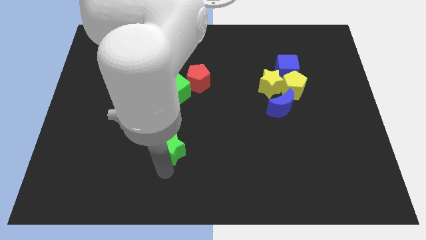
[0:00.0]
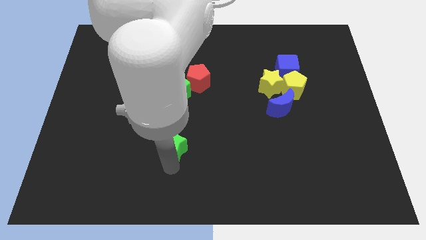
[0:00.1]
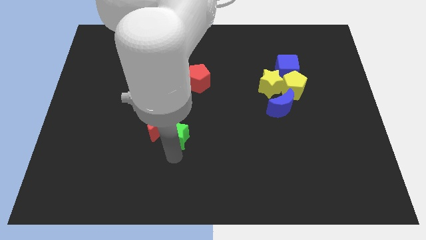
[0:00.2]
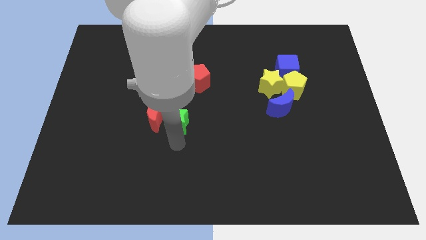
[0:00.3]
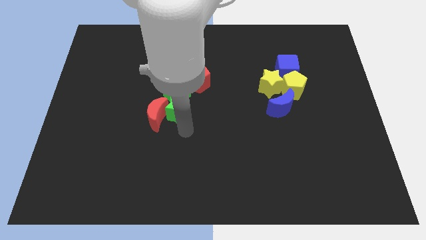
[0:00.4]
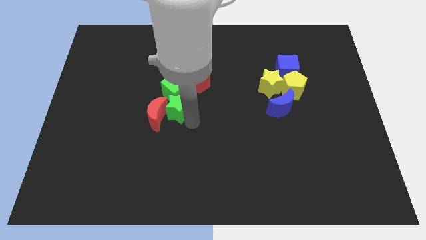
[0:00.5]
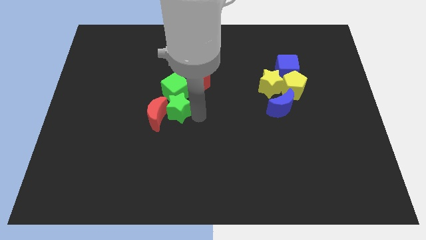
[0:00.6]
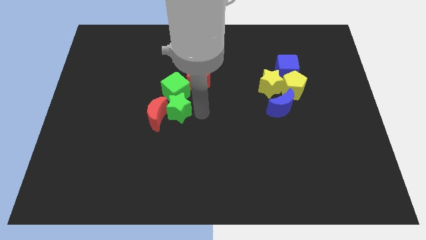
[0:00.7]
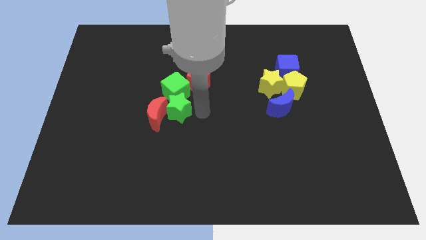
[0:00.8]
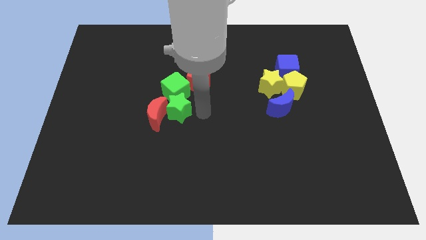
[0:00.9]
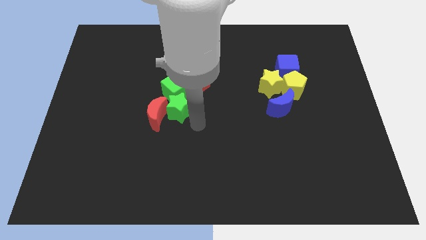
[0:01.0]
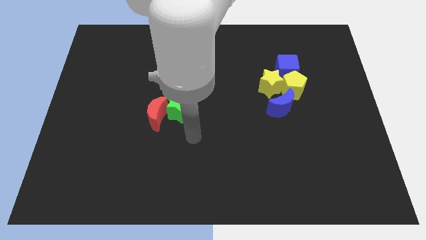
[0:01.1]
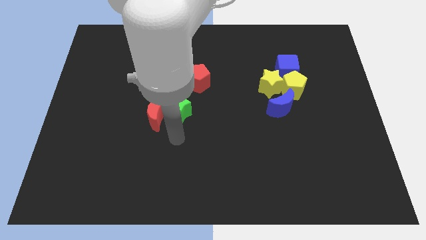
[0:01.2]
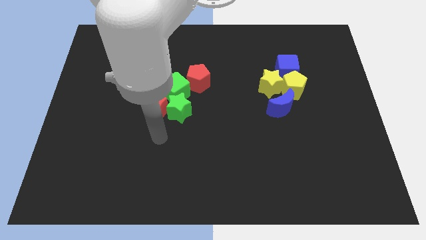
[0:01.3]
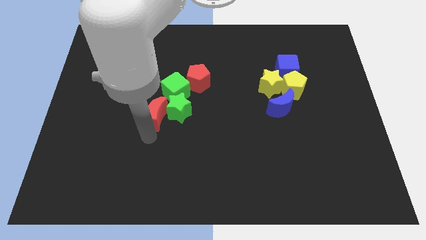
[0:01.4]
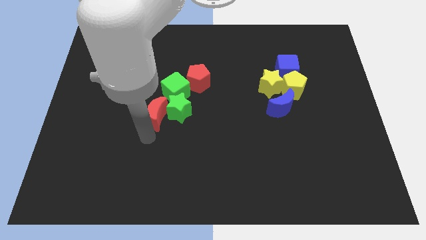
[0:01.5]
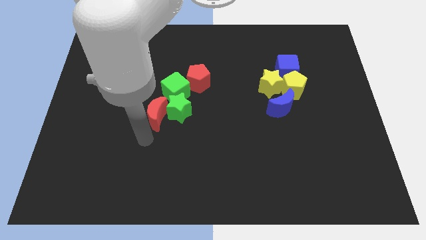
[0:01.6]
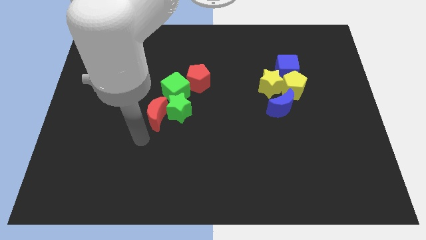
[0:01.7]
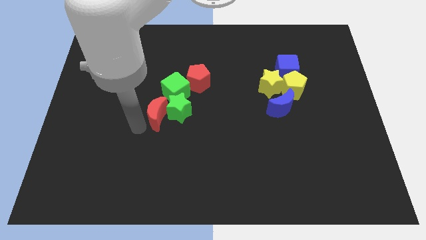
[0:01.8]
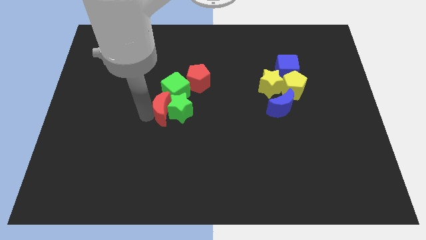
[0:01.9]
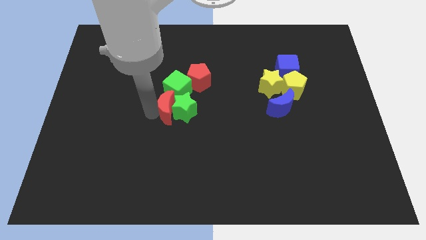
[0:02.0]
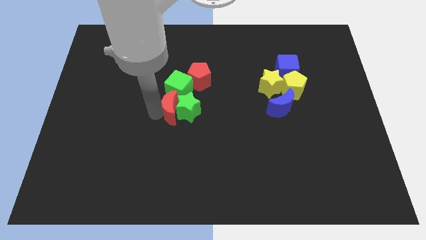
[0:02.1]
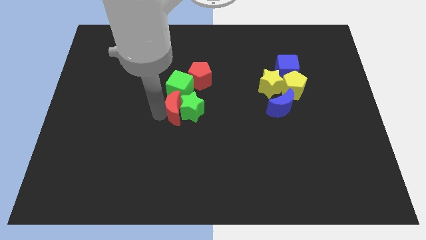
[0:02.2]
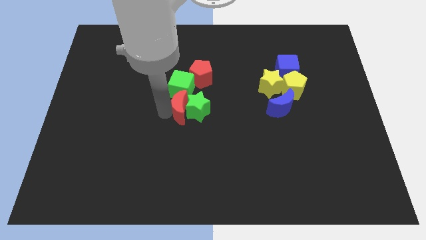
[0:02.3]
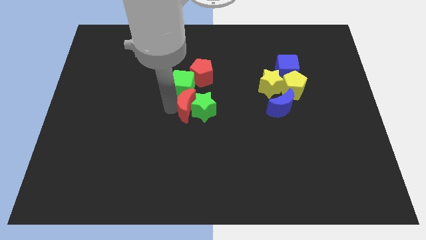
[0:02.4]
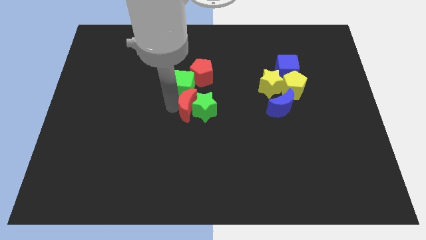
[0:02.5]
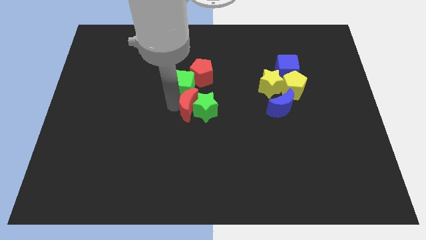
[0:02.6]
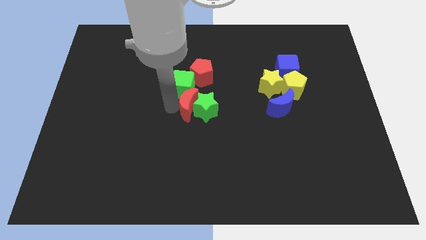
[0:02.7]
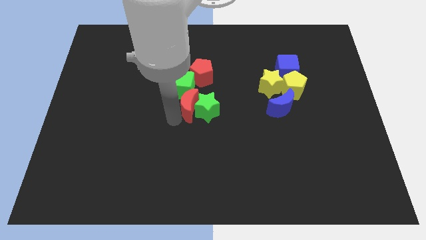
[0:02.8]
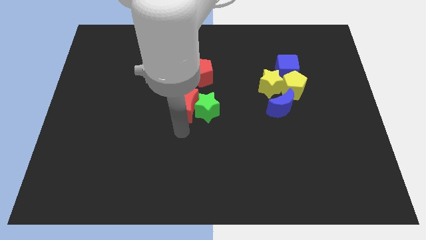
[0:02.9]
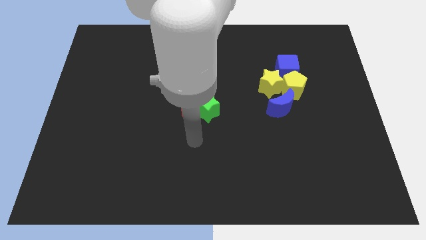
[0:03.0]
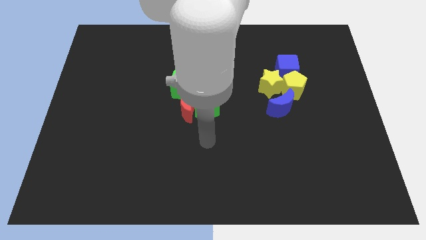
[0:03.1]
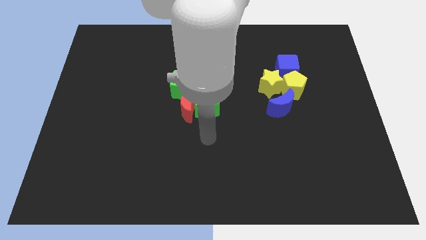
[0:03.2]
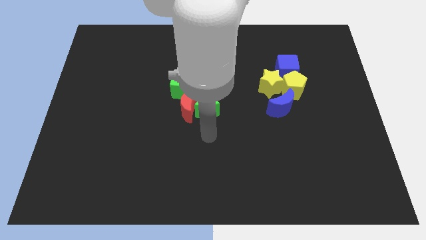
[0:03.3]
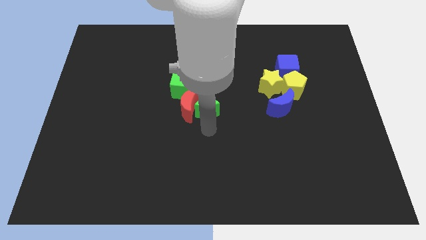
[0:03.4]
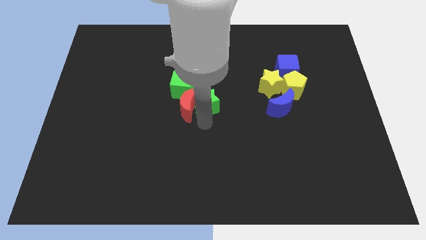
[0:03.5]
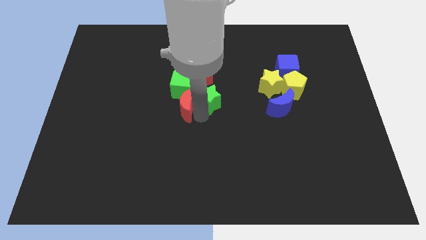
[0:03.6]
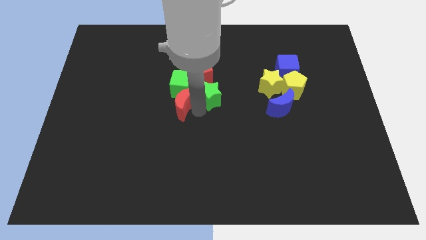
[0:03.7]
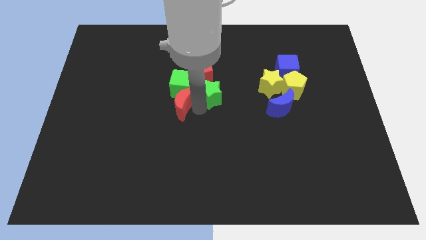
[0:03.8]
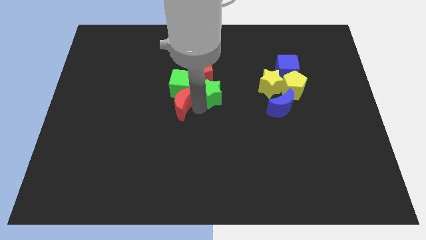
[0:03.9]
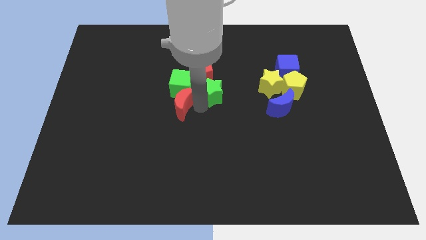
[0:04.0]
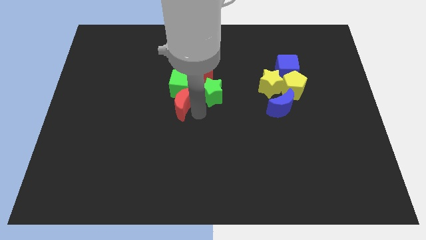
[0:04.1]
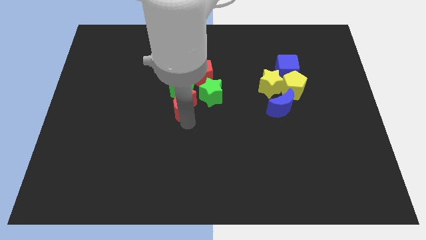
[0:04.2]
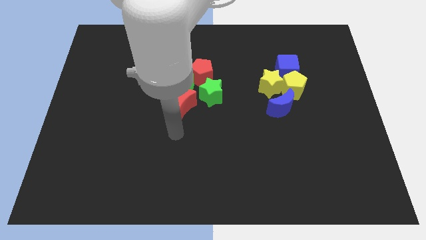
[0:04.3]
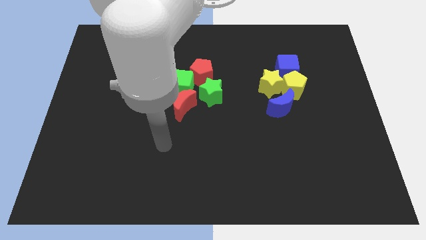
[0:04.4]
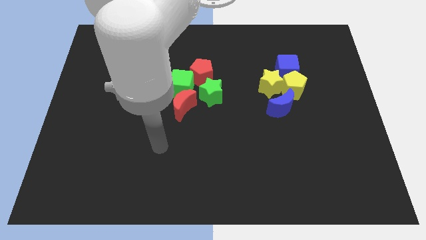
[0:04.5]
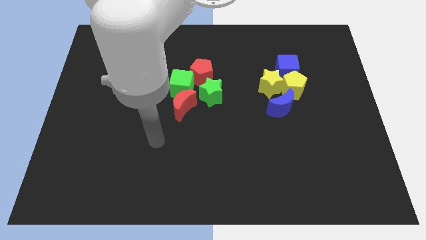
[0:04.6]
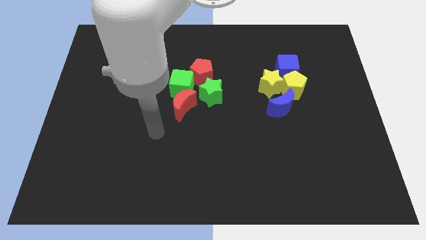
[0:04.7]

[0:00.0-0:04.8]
push a group of blocks upward

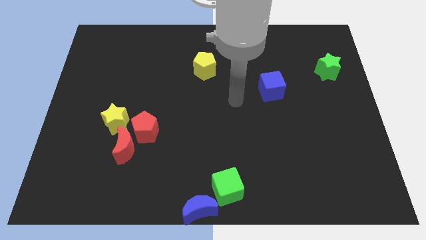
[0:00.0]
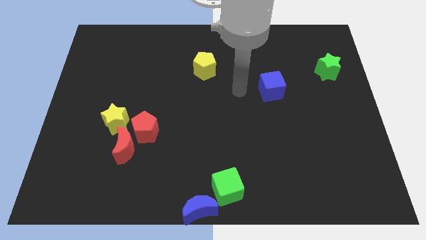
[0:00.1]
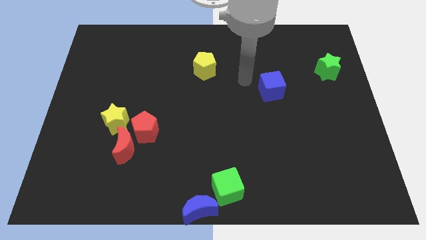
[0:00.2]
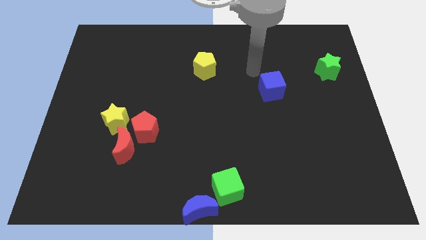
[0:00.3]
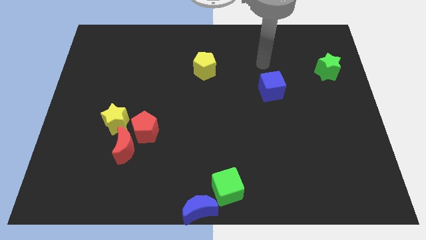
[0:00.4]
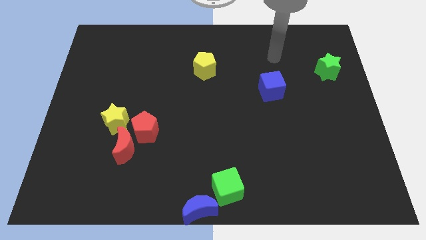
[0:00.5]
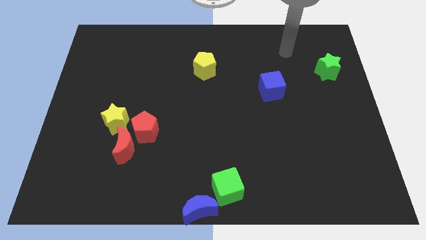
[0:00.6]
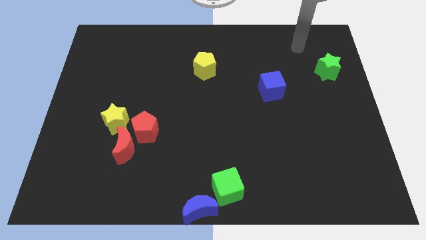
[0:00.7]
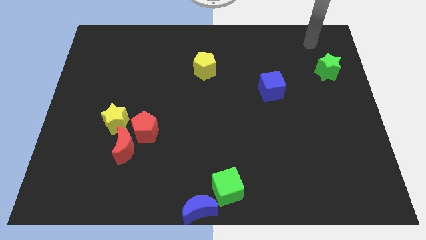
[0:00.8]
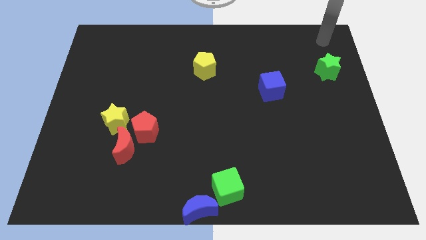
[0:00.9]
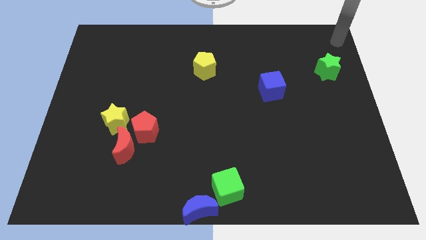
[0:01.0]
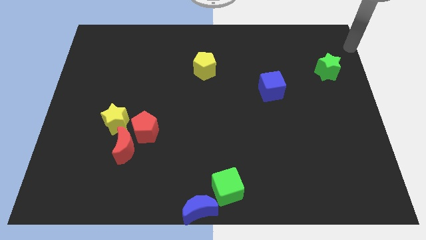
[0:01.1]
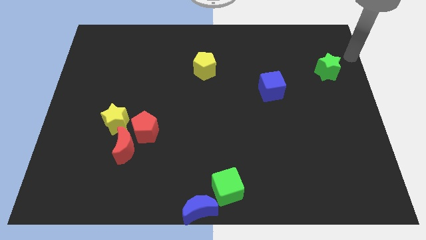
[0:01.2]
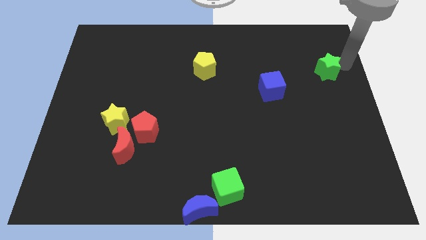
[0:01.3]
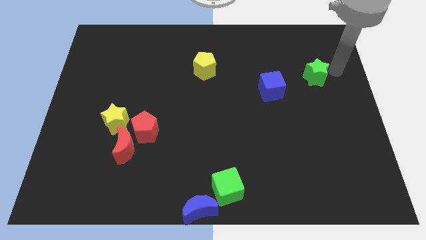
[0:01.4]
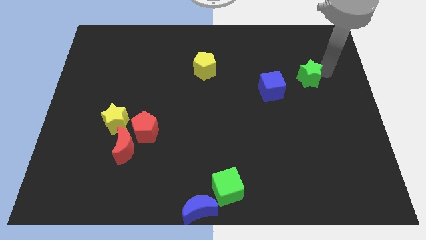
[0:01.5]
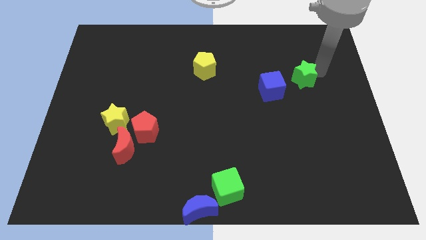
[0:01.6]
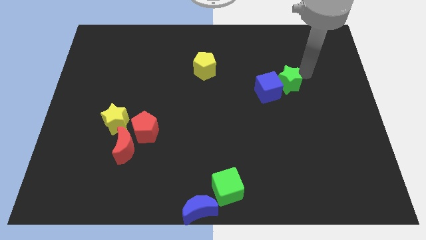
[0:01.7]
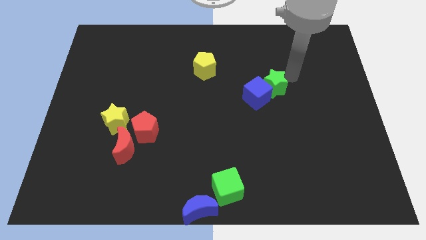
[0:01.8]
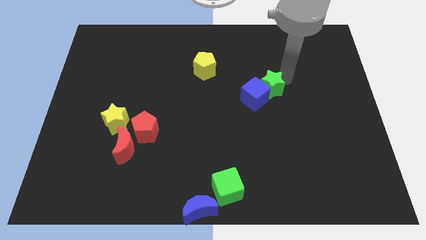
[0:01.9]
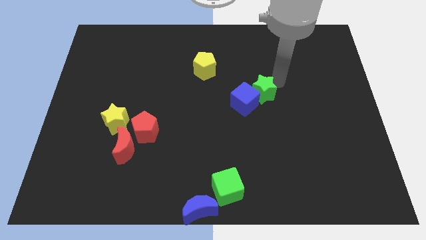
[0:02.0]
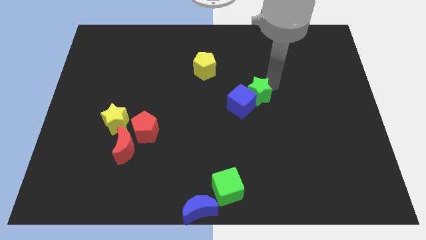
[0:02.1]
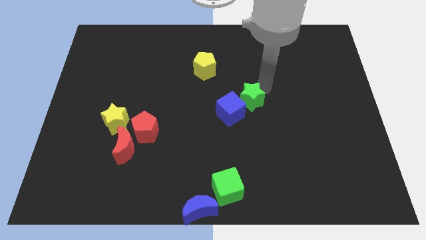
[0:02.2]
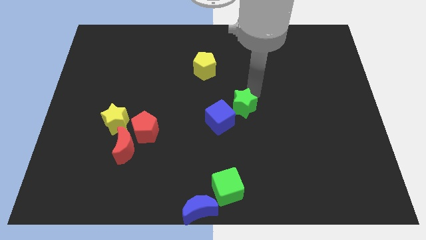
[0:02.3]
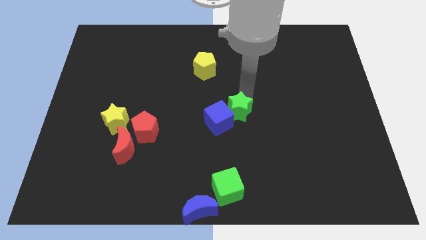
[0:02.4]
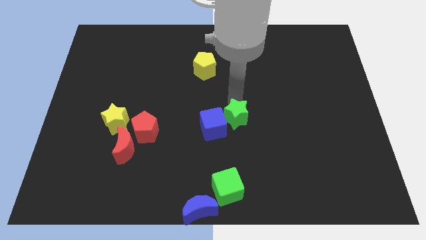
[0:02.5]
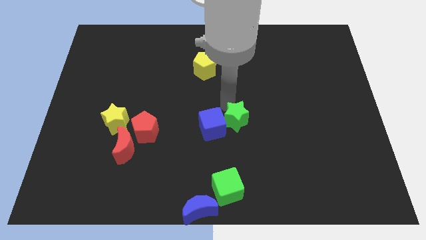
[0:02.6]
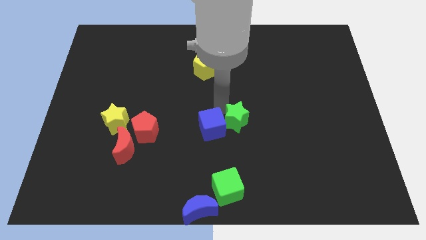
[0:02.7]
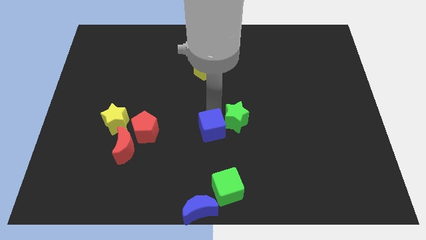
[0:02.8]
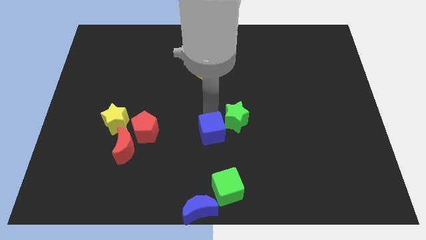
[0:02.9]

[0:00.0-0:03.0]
push green star to the center

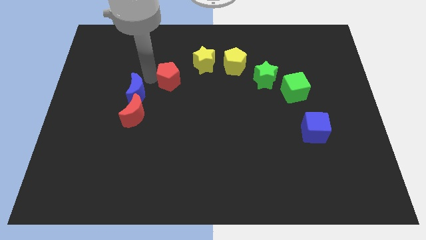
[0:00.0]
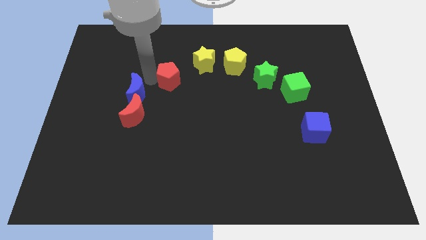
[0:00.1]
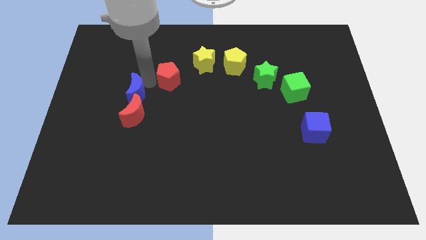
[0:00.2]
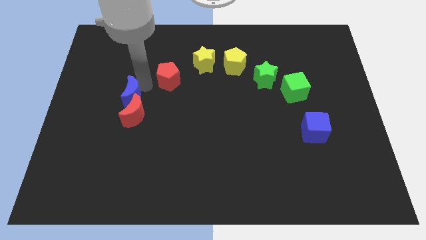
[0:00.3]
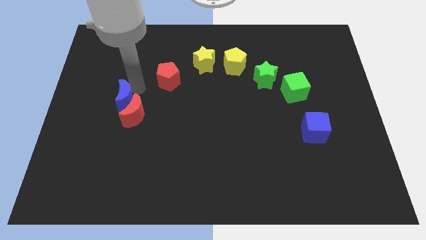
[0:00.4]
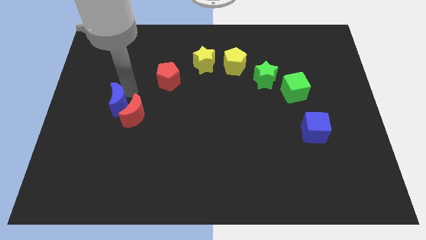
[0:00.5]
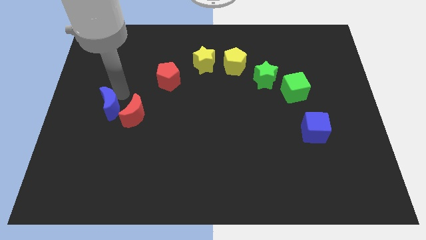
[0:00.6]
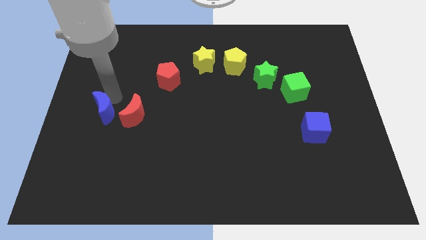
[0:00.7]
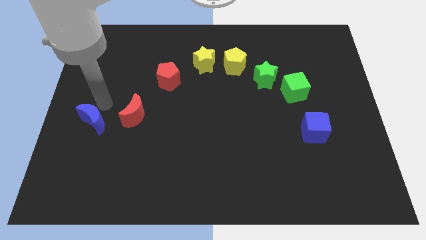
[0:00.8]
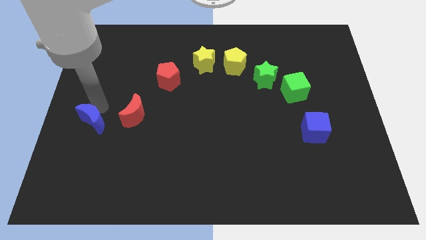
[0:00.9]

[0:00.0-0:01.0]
separate the blue crescent from the red crescent
